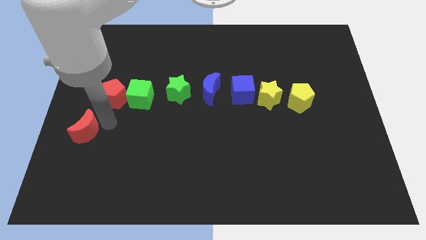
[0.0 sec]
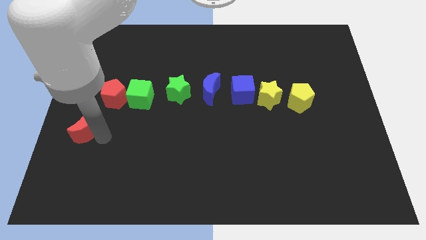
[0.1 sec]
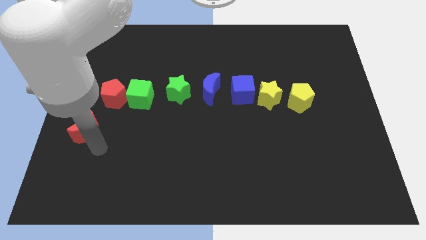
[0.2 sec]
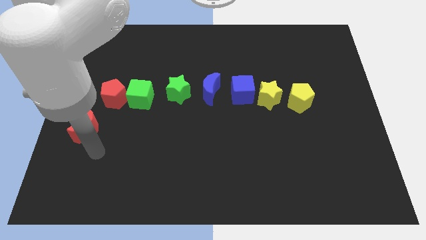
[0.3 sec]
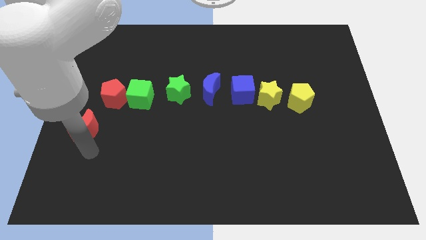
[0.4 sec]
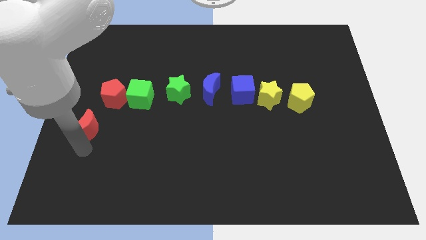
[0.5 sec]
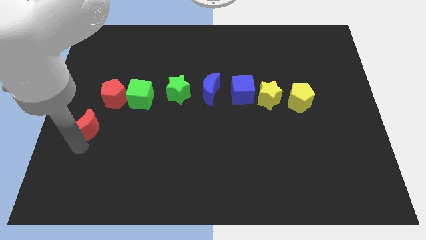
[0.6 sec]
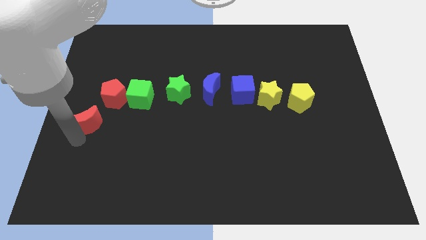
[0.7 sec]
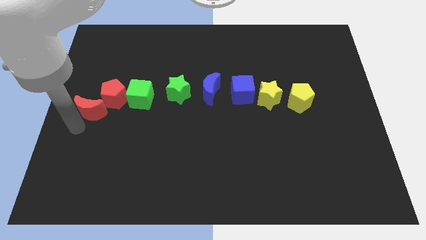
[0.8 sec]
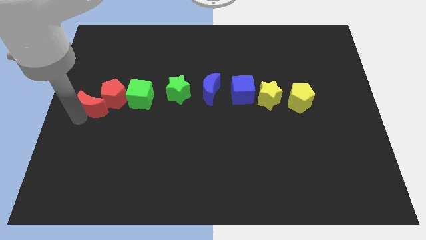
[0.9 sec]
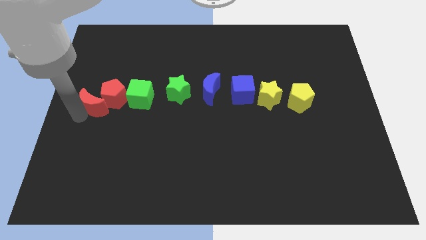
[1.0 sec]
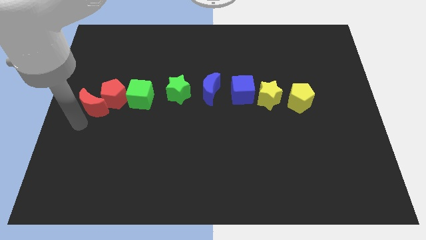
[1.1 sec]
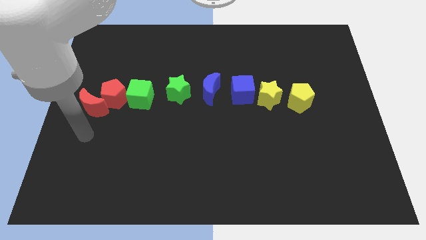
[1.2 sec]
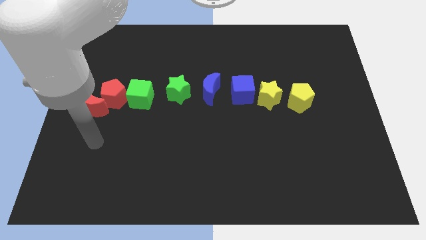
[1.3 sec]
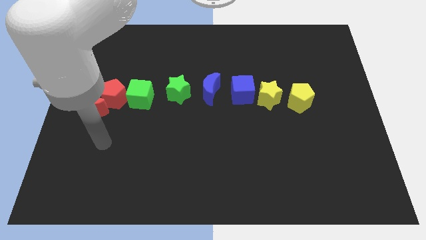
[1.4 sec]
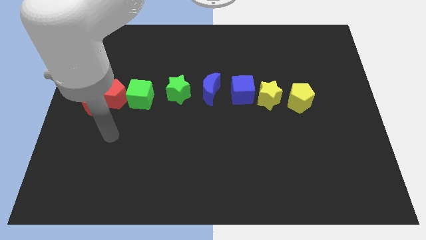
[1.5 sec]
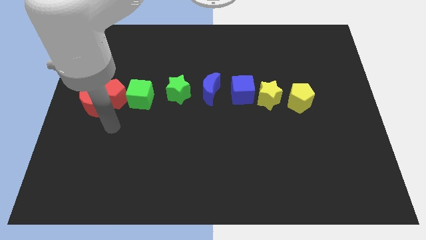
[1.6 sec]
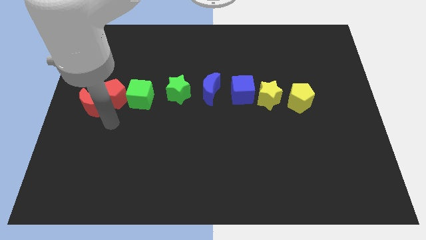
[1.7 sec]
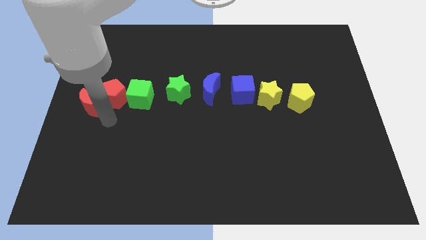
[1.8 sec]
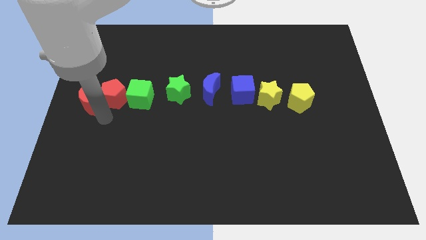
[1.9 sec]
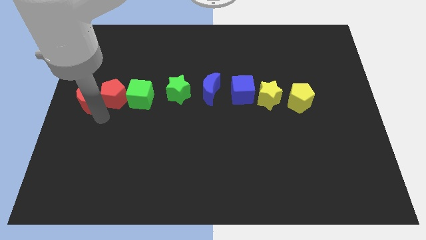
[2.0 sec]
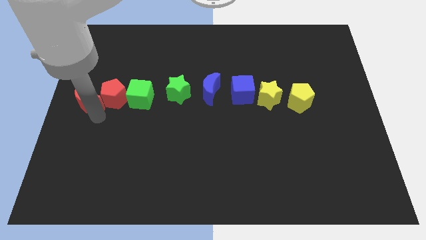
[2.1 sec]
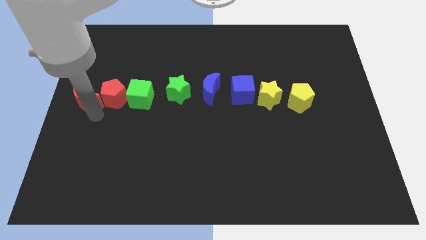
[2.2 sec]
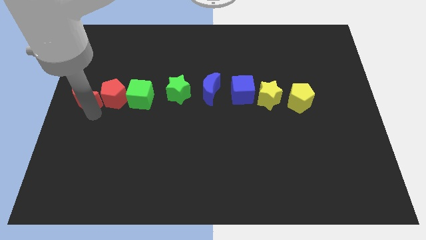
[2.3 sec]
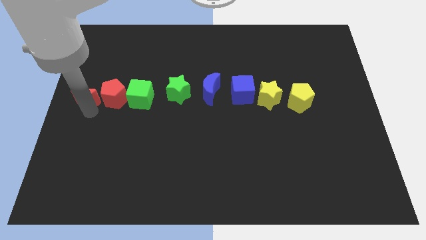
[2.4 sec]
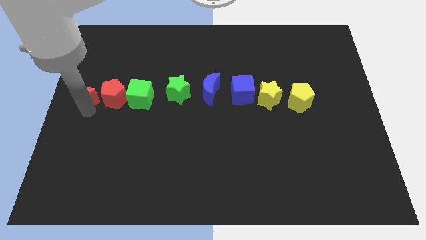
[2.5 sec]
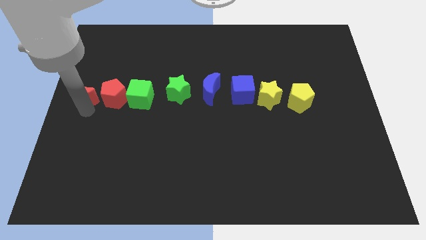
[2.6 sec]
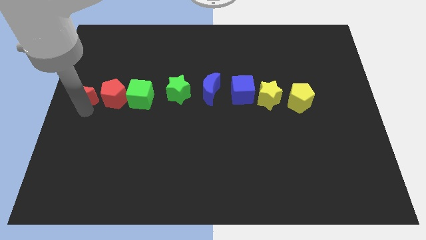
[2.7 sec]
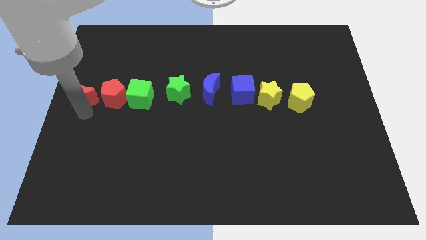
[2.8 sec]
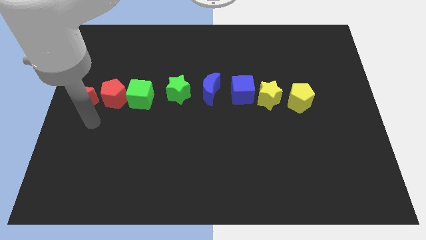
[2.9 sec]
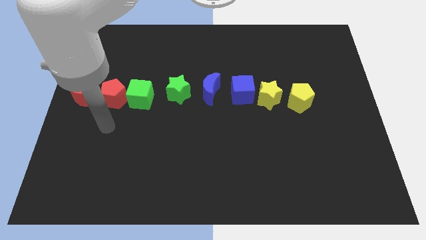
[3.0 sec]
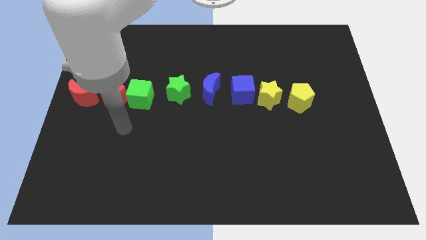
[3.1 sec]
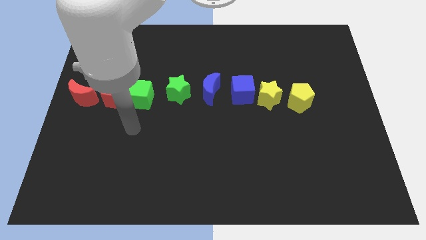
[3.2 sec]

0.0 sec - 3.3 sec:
push the red crescent to the center left of the red pentagon

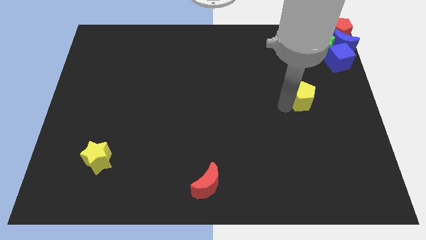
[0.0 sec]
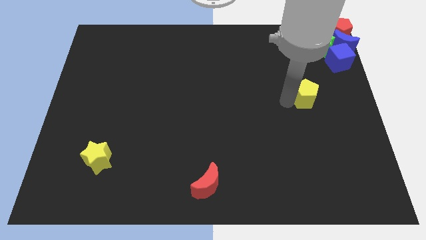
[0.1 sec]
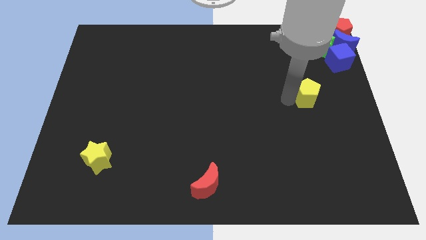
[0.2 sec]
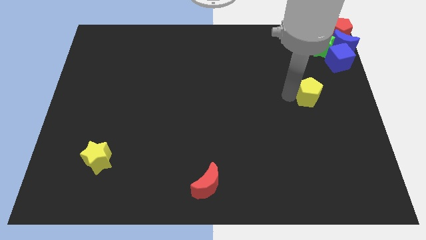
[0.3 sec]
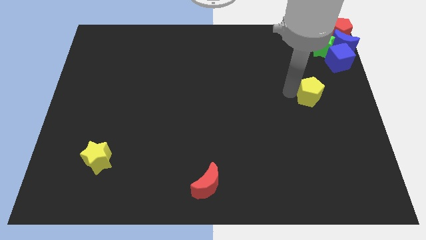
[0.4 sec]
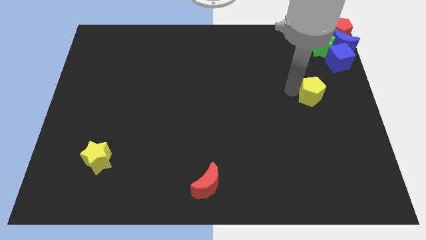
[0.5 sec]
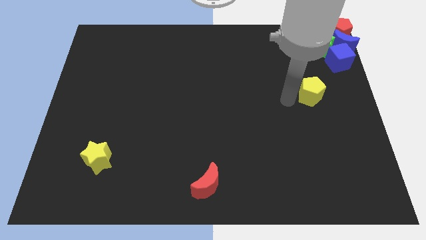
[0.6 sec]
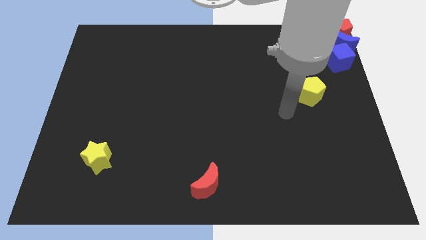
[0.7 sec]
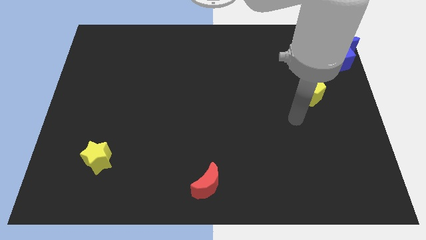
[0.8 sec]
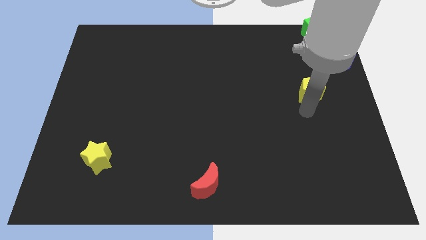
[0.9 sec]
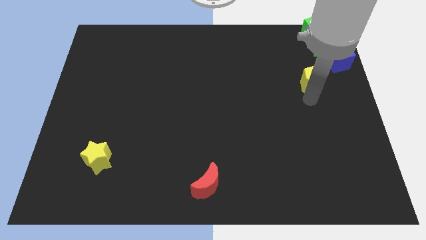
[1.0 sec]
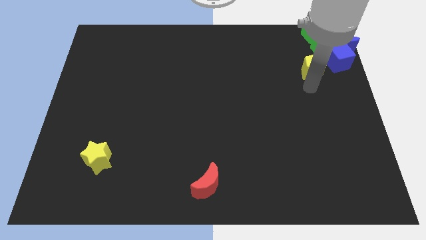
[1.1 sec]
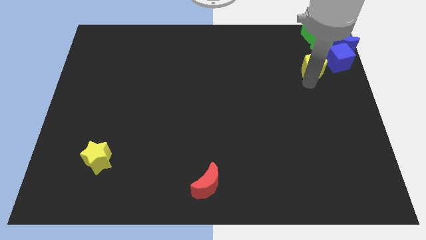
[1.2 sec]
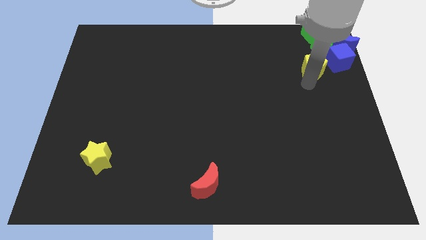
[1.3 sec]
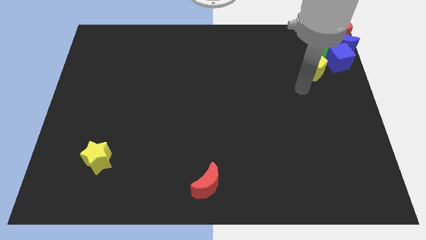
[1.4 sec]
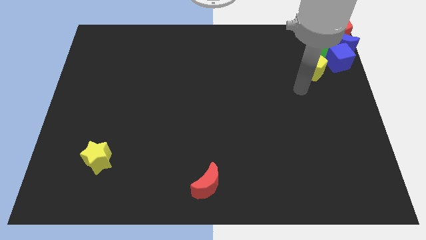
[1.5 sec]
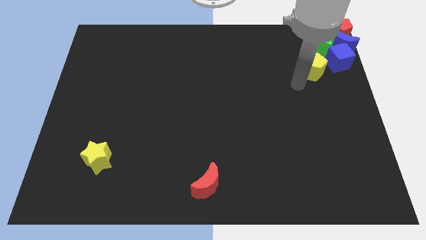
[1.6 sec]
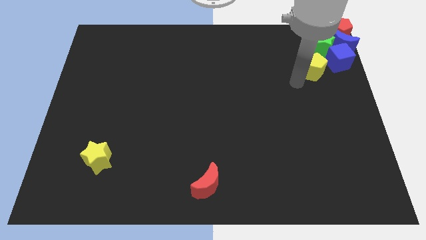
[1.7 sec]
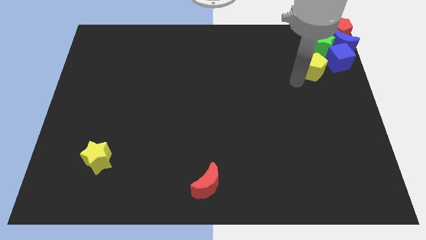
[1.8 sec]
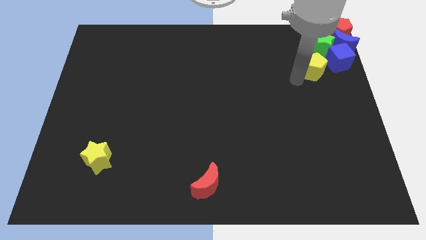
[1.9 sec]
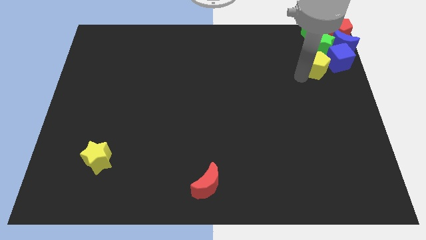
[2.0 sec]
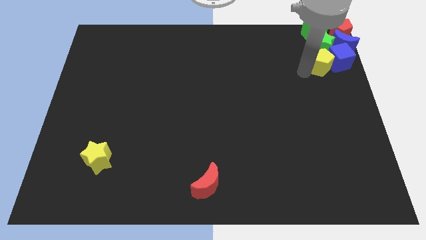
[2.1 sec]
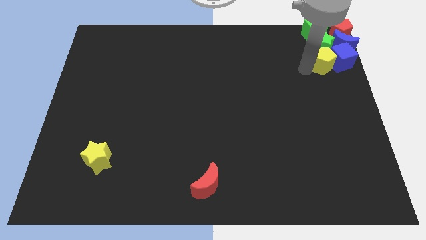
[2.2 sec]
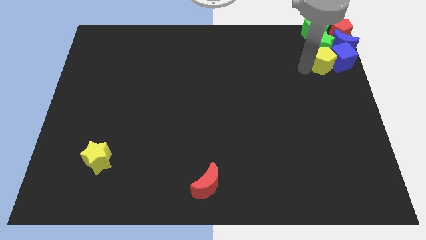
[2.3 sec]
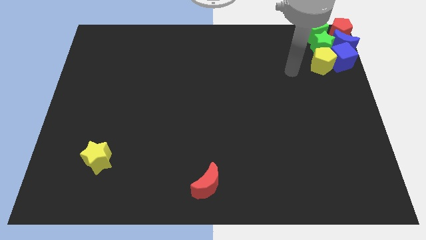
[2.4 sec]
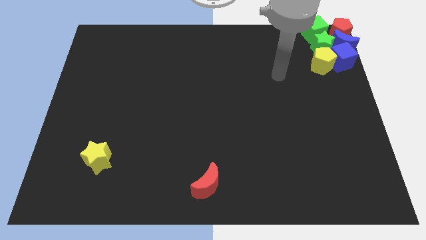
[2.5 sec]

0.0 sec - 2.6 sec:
move the yellow pentagon into the group of blocks

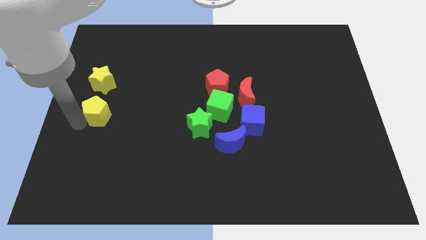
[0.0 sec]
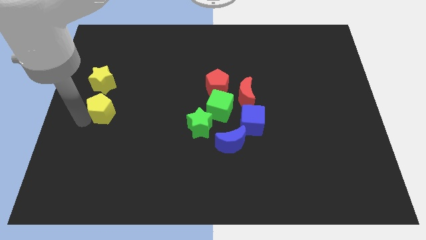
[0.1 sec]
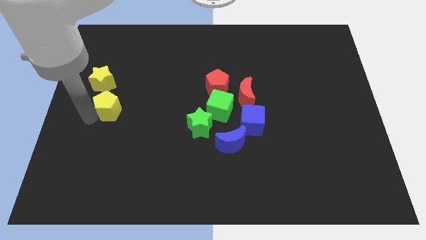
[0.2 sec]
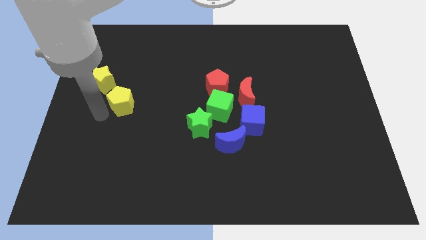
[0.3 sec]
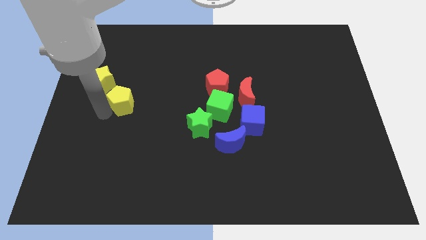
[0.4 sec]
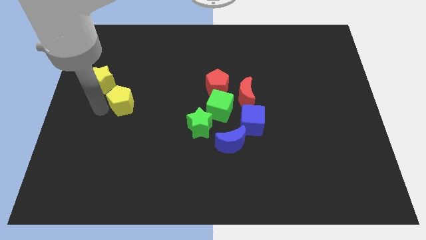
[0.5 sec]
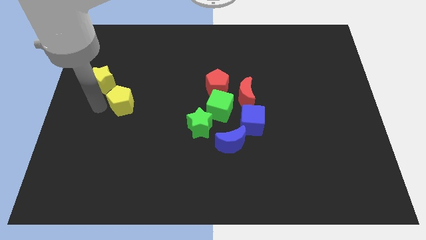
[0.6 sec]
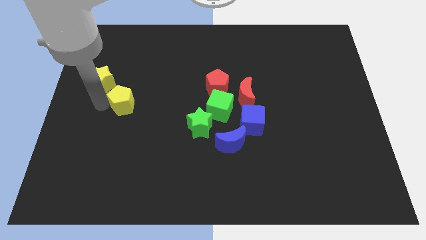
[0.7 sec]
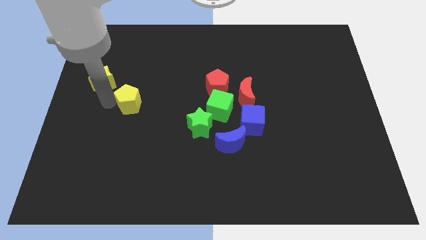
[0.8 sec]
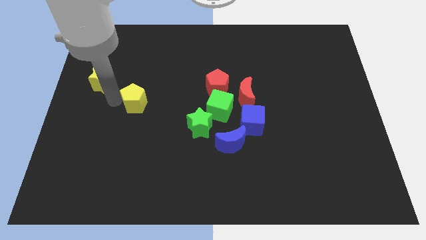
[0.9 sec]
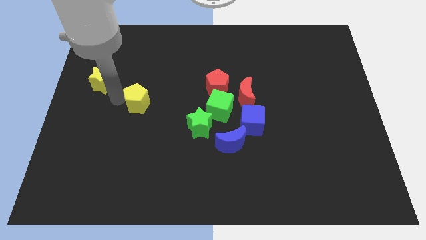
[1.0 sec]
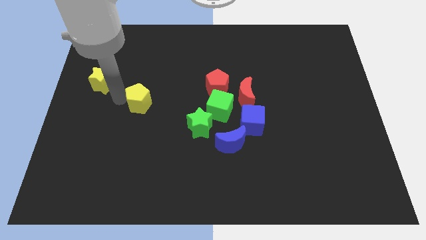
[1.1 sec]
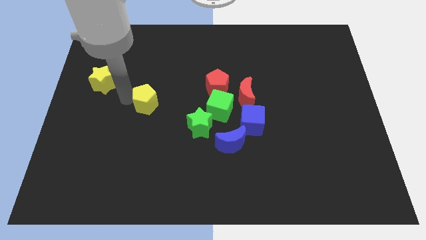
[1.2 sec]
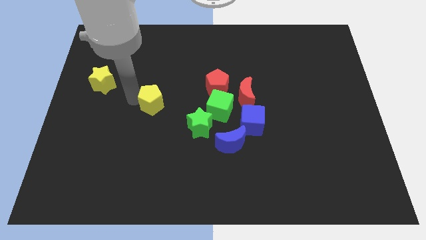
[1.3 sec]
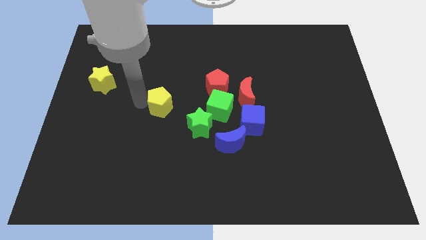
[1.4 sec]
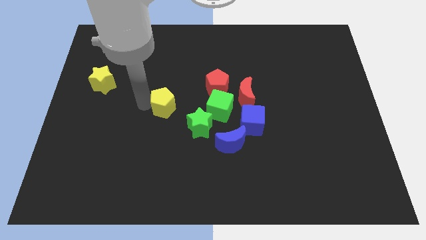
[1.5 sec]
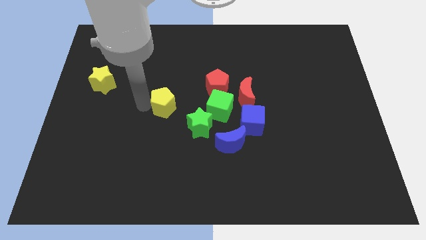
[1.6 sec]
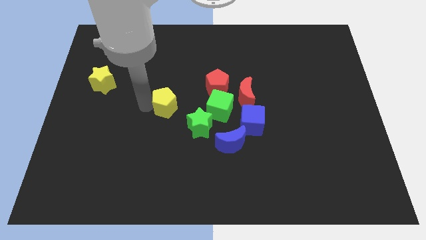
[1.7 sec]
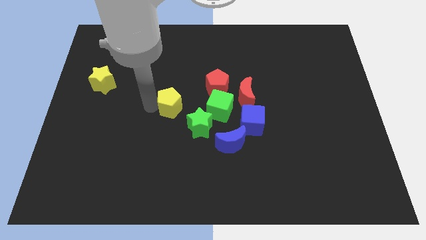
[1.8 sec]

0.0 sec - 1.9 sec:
push the yellow pentagon to the top left of the green star

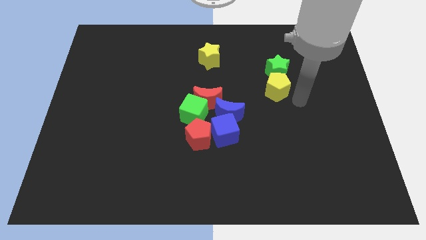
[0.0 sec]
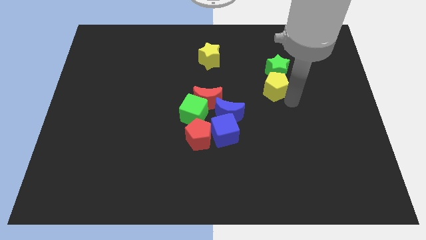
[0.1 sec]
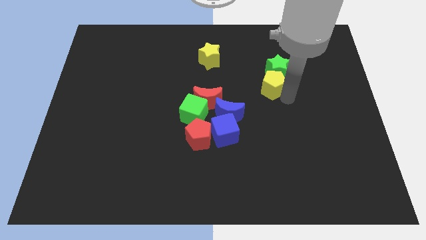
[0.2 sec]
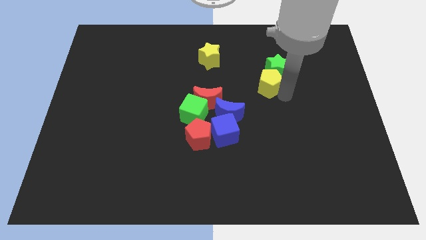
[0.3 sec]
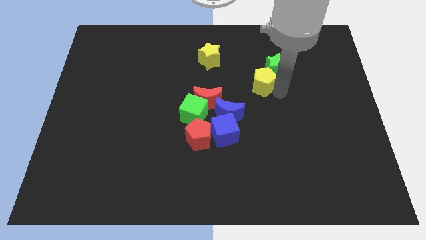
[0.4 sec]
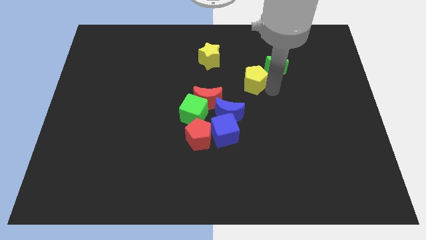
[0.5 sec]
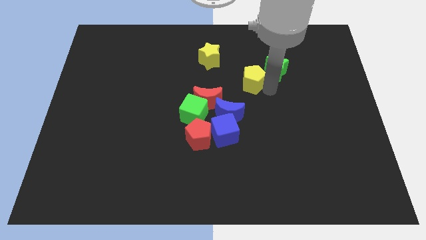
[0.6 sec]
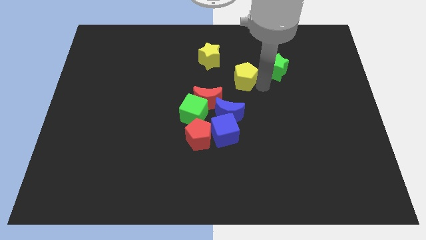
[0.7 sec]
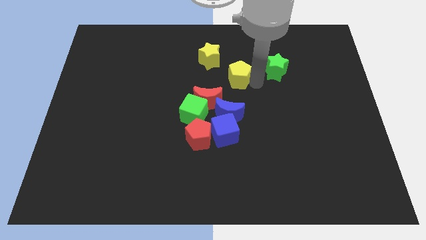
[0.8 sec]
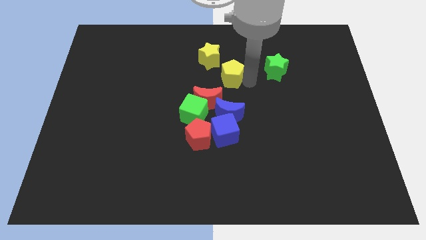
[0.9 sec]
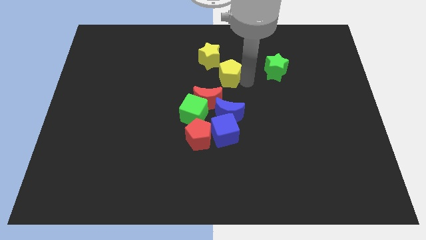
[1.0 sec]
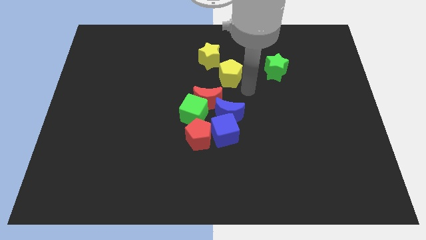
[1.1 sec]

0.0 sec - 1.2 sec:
place yellow pentagon to the bottom right of yellow star
